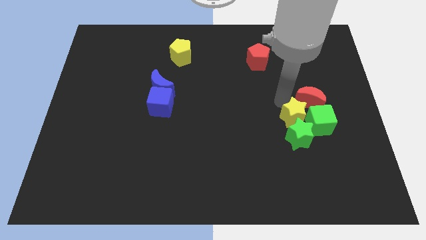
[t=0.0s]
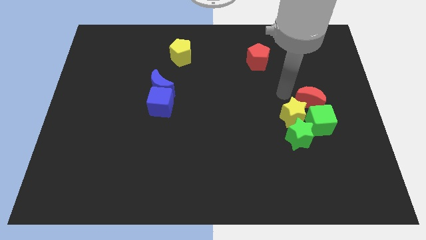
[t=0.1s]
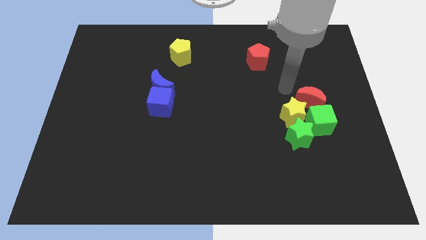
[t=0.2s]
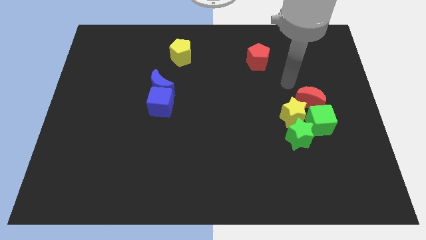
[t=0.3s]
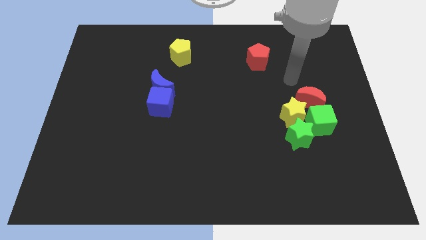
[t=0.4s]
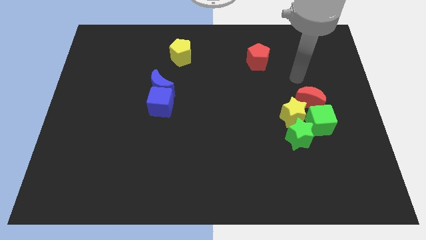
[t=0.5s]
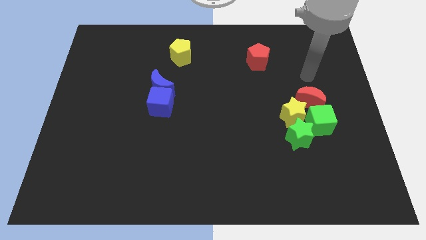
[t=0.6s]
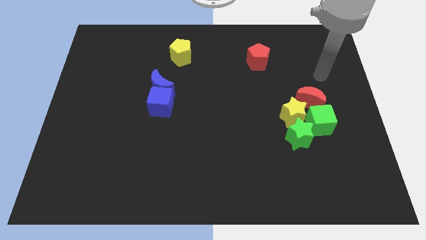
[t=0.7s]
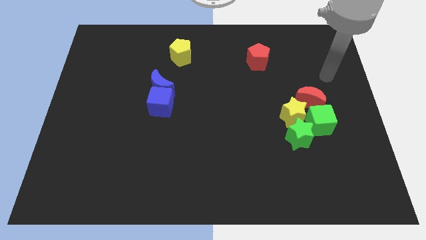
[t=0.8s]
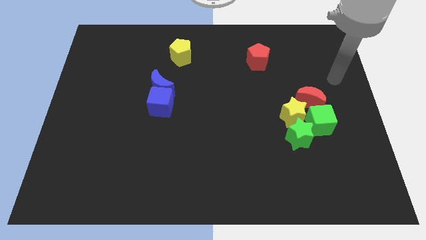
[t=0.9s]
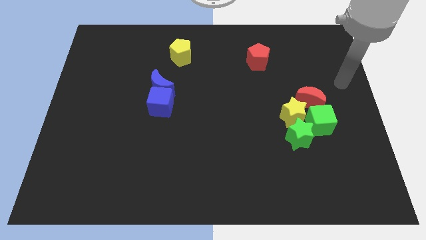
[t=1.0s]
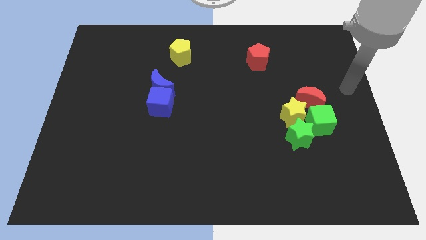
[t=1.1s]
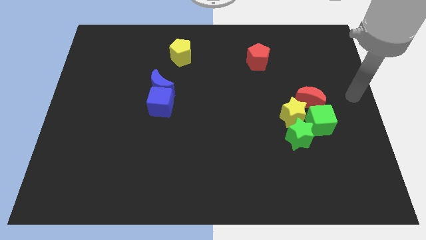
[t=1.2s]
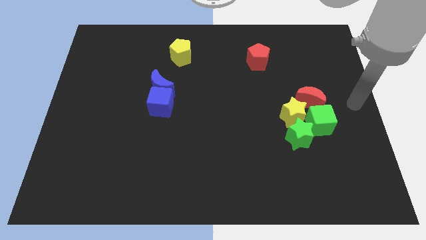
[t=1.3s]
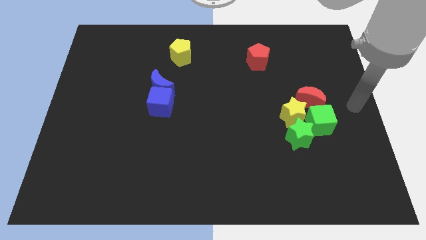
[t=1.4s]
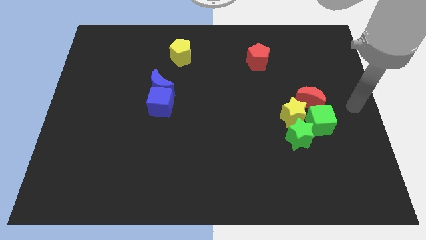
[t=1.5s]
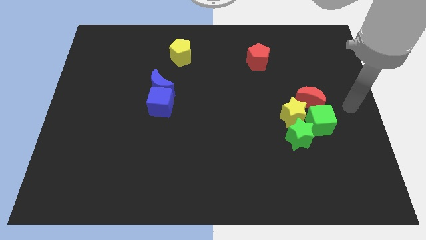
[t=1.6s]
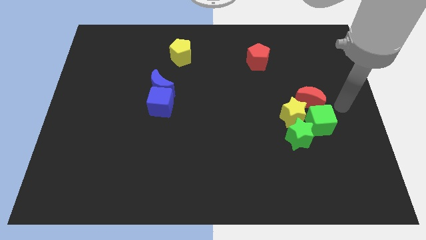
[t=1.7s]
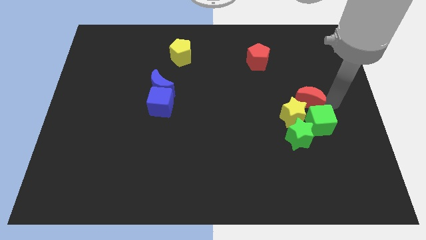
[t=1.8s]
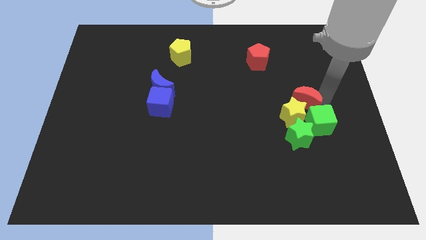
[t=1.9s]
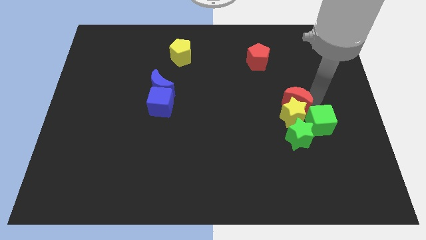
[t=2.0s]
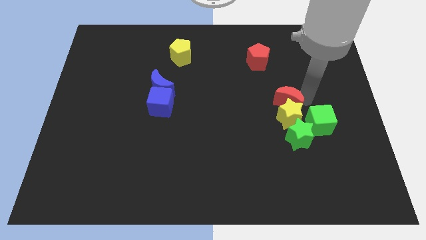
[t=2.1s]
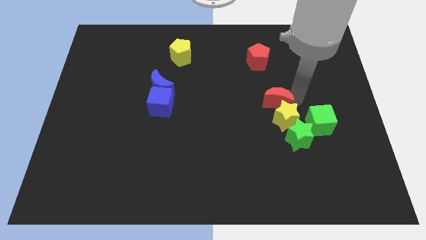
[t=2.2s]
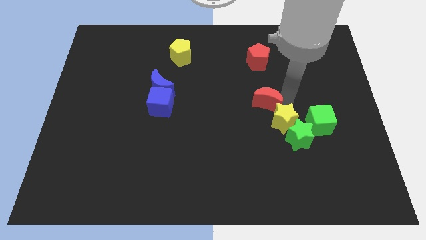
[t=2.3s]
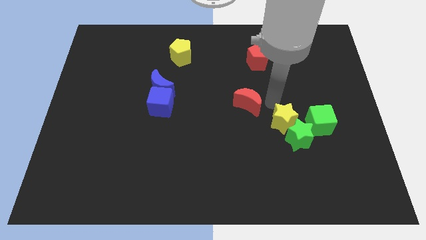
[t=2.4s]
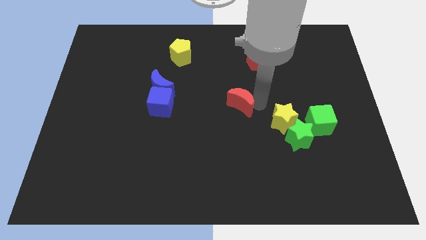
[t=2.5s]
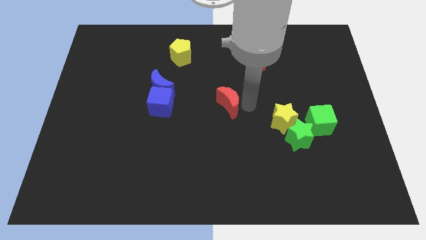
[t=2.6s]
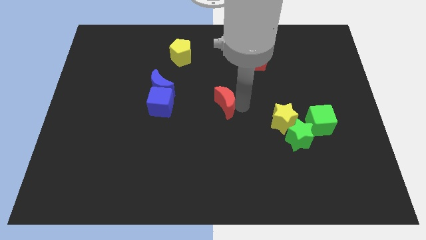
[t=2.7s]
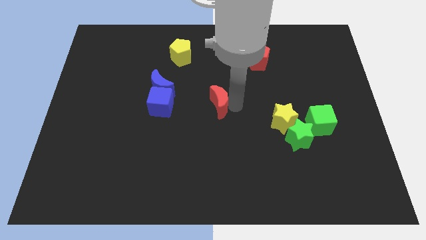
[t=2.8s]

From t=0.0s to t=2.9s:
separate the red moon from yellow star and green cube

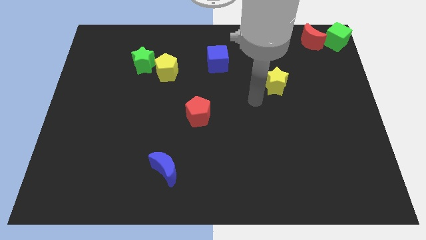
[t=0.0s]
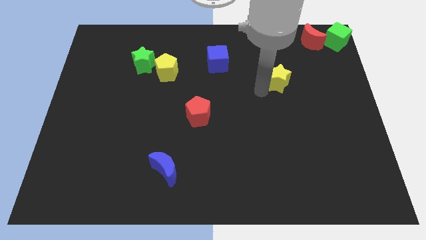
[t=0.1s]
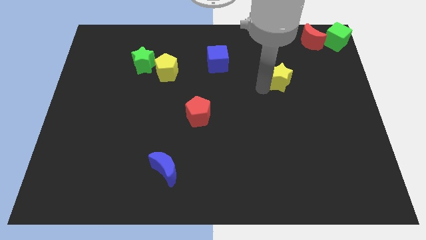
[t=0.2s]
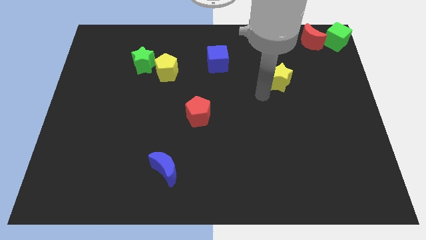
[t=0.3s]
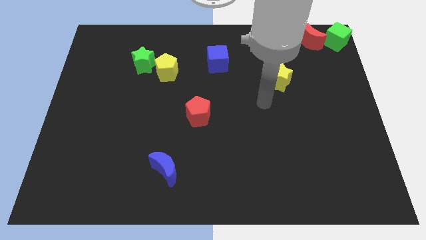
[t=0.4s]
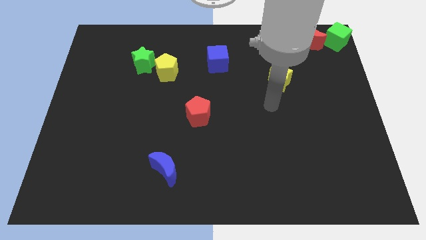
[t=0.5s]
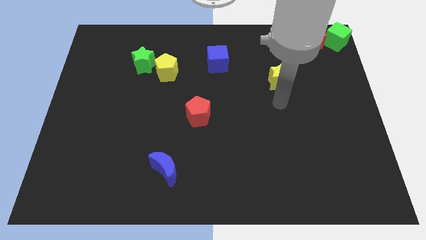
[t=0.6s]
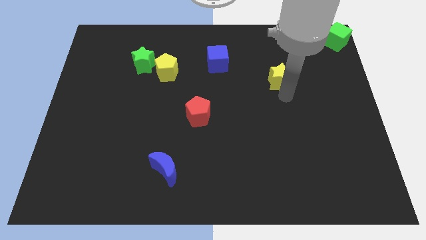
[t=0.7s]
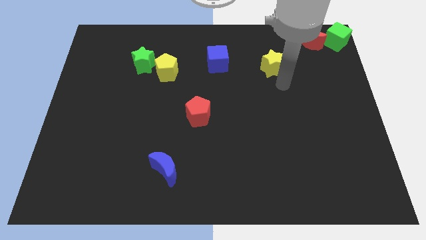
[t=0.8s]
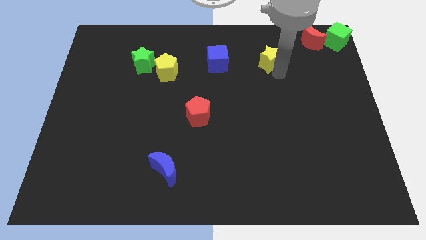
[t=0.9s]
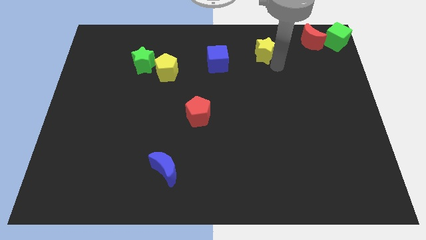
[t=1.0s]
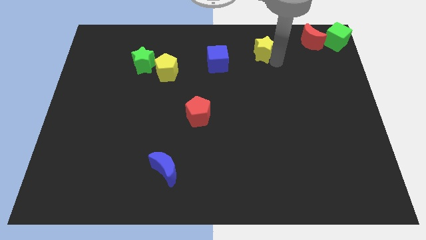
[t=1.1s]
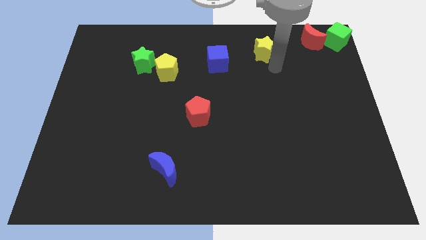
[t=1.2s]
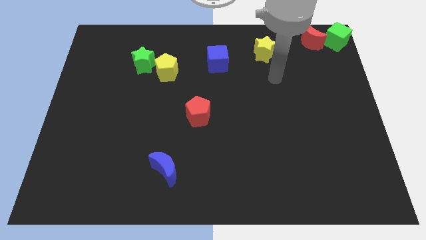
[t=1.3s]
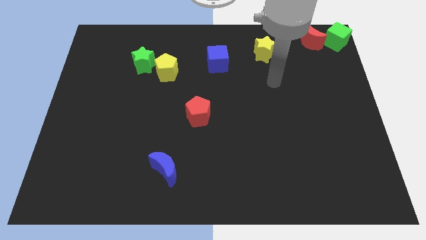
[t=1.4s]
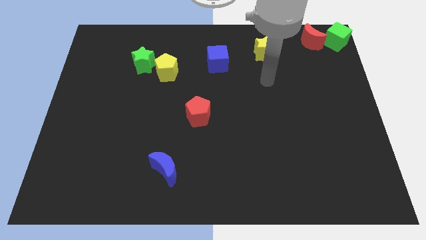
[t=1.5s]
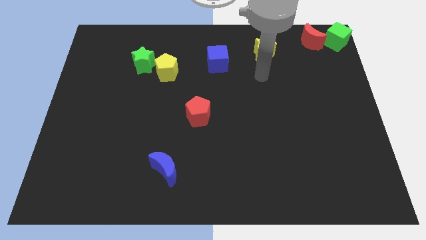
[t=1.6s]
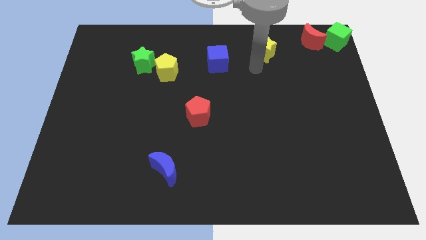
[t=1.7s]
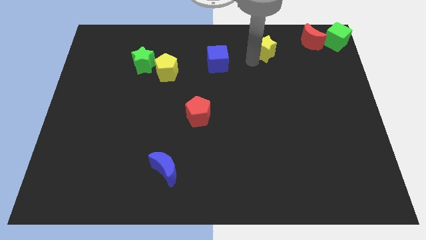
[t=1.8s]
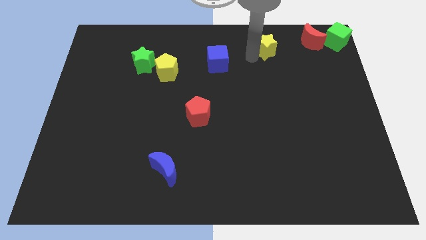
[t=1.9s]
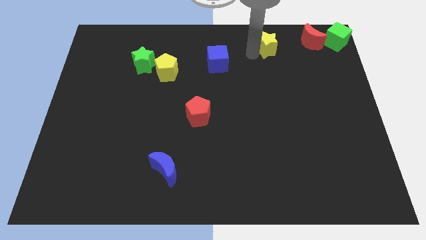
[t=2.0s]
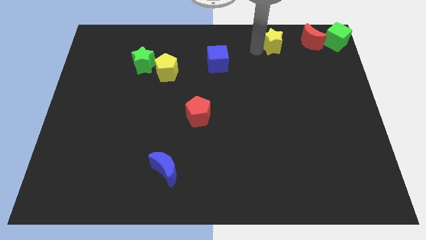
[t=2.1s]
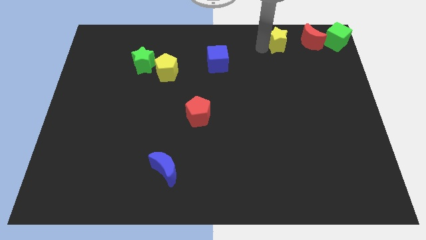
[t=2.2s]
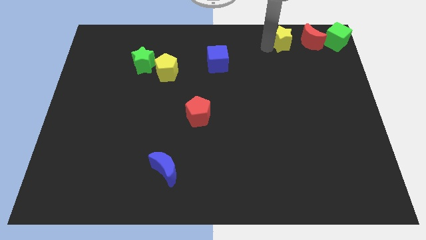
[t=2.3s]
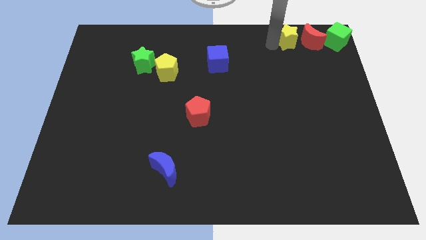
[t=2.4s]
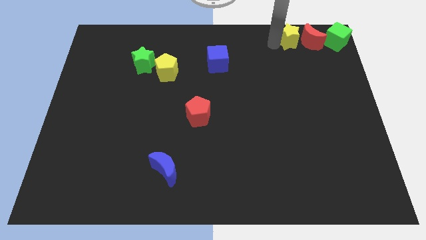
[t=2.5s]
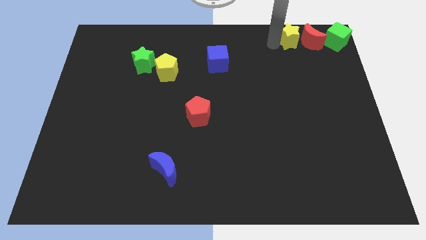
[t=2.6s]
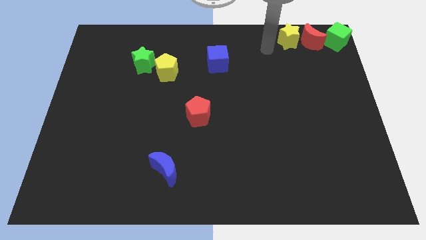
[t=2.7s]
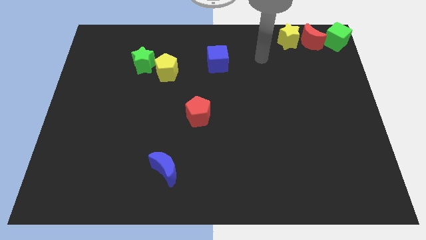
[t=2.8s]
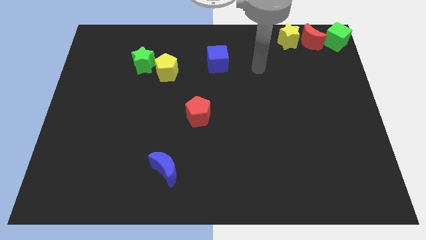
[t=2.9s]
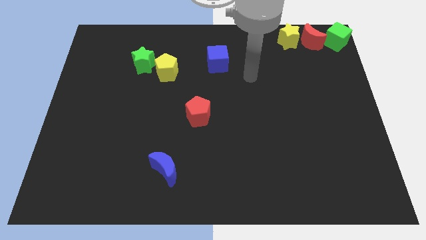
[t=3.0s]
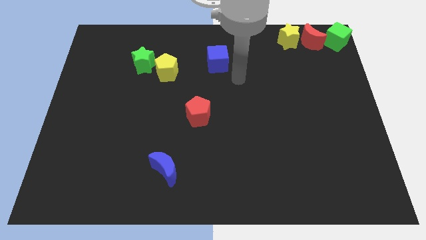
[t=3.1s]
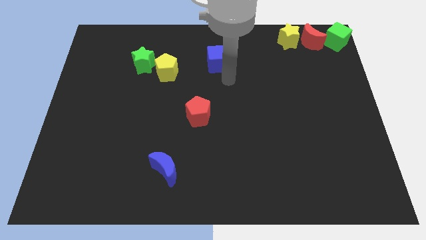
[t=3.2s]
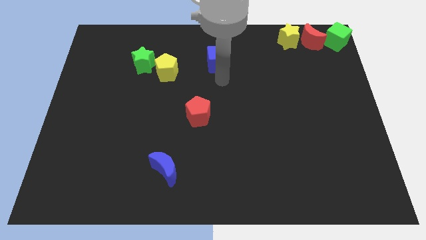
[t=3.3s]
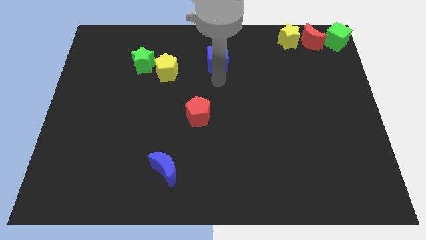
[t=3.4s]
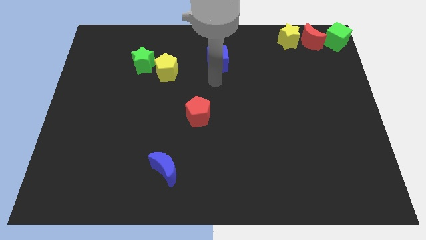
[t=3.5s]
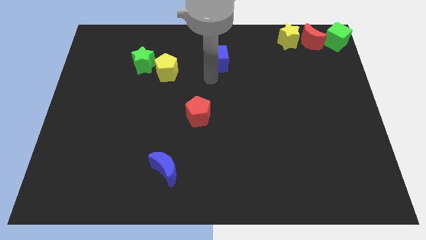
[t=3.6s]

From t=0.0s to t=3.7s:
push the yellow star to the left of the red moon

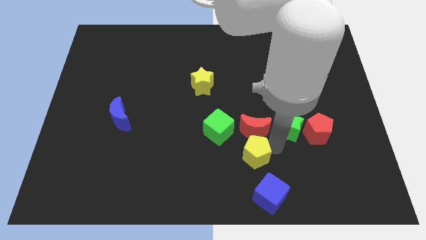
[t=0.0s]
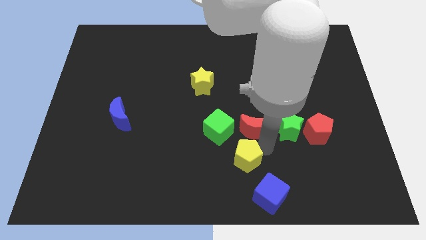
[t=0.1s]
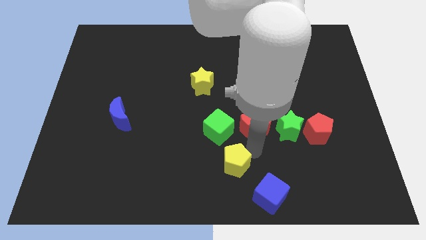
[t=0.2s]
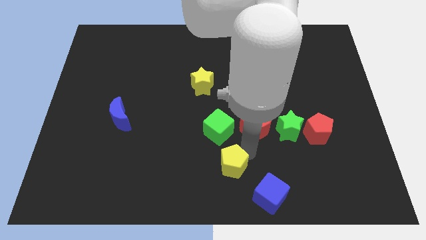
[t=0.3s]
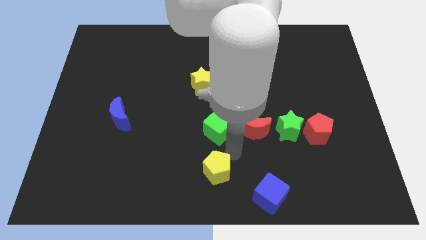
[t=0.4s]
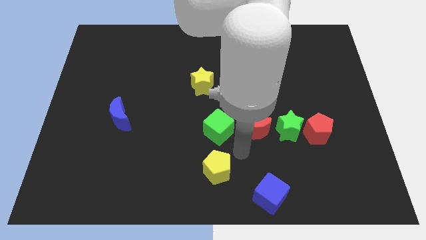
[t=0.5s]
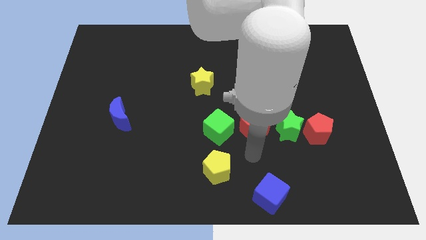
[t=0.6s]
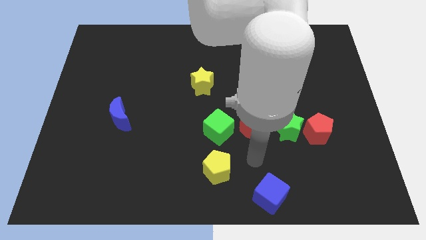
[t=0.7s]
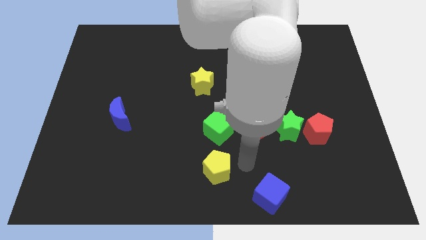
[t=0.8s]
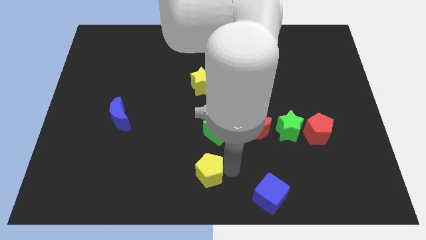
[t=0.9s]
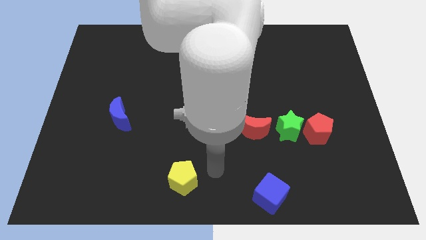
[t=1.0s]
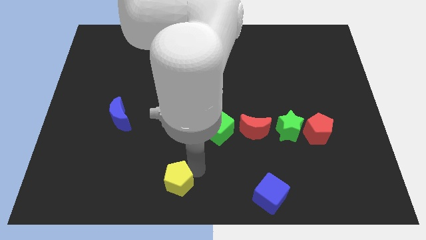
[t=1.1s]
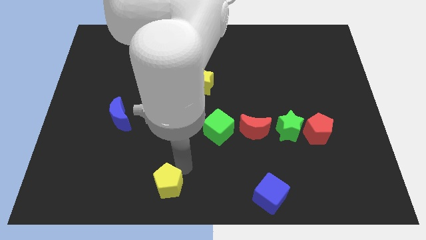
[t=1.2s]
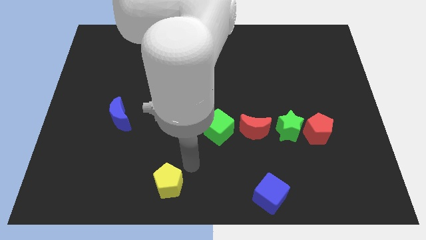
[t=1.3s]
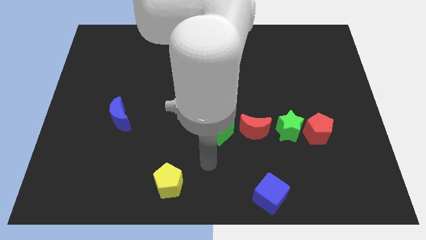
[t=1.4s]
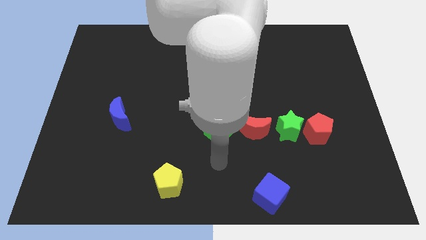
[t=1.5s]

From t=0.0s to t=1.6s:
place the yellow pentagon to the left side of the blue cube

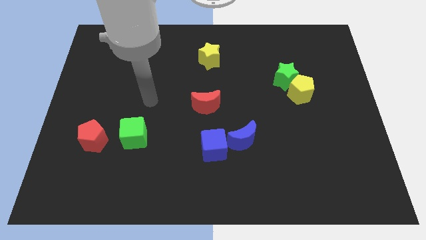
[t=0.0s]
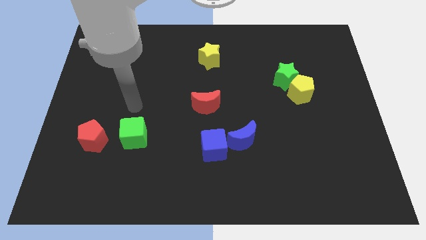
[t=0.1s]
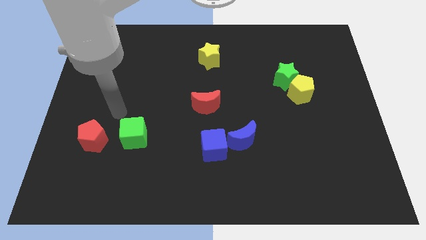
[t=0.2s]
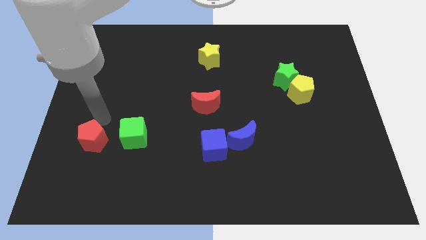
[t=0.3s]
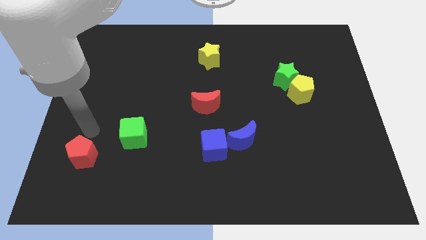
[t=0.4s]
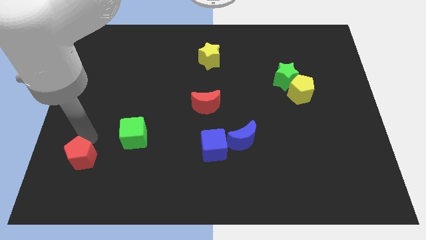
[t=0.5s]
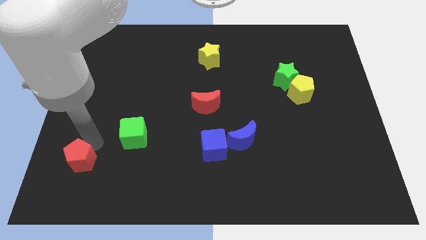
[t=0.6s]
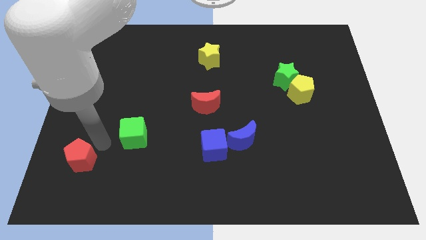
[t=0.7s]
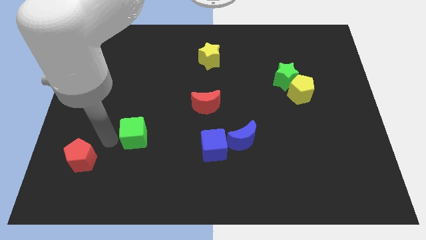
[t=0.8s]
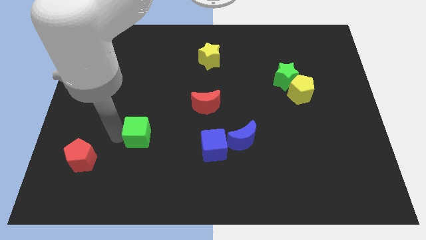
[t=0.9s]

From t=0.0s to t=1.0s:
move red pentagon away from green cube
